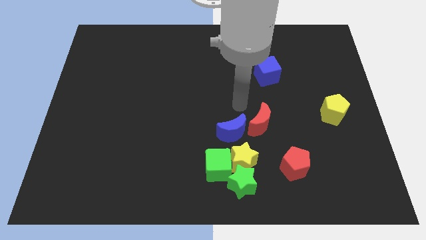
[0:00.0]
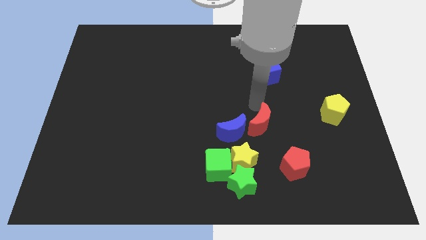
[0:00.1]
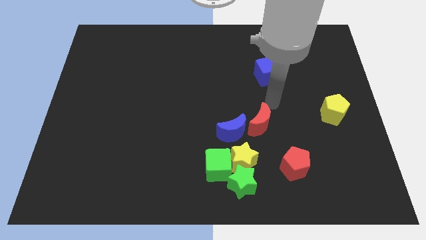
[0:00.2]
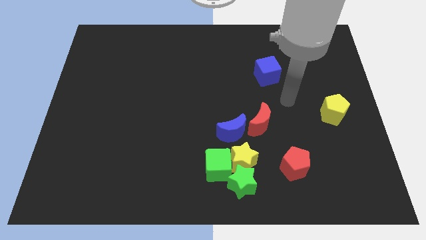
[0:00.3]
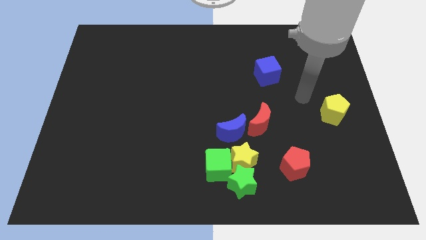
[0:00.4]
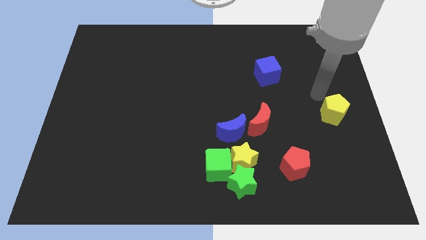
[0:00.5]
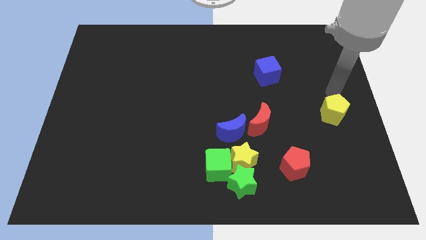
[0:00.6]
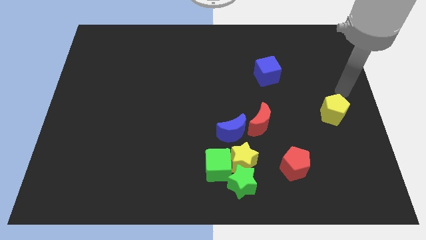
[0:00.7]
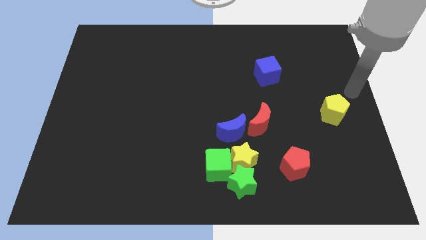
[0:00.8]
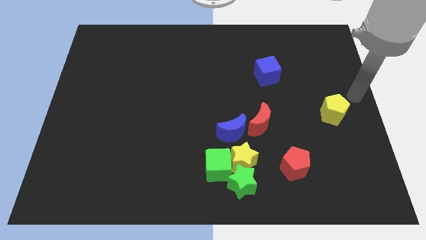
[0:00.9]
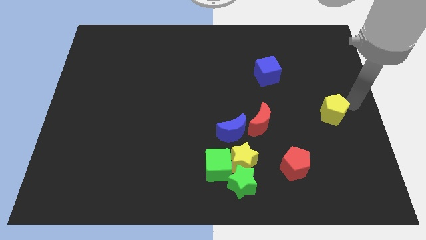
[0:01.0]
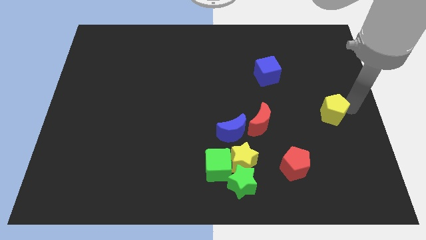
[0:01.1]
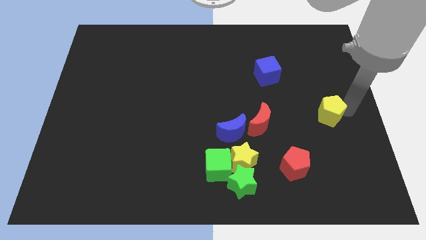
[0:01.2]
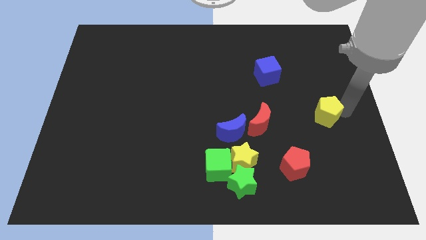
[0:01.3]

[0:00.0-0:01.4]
tap the yellow pentagon

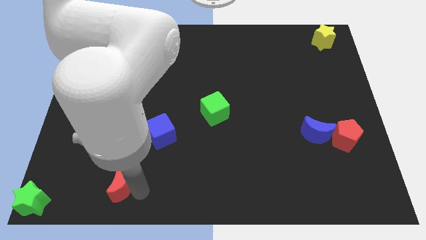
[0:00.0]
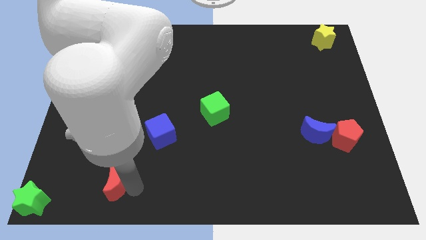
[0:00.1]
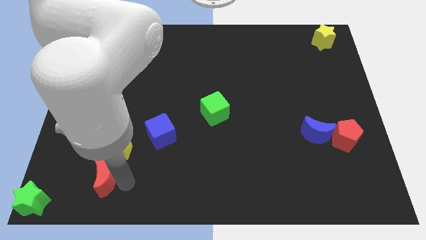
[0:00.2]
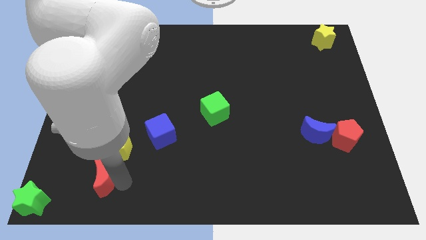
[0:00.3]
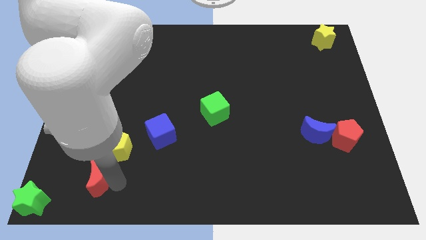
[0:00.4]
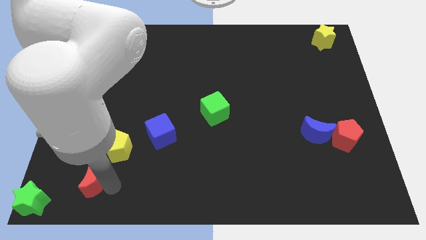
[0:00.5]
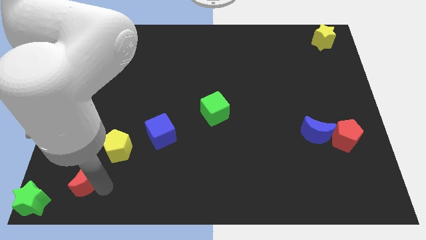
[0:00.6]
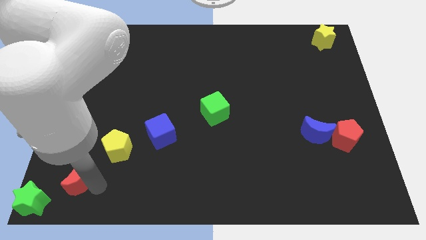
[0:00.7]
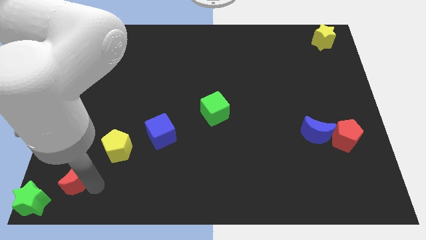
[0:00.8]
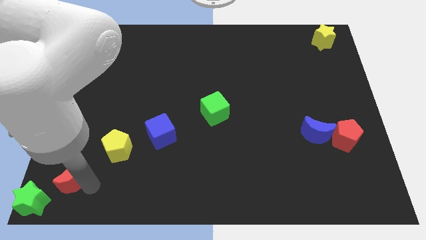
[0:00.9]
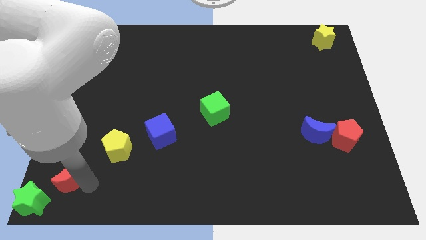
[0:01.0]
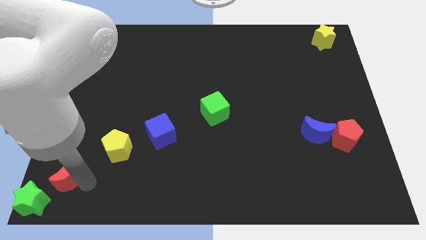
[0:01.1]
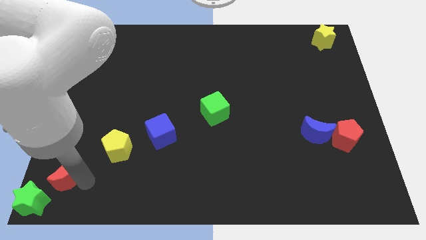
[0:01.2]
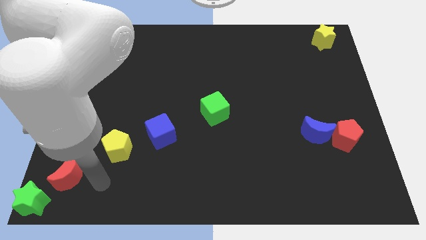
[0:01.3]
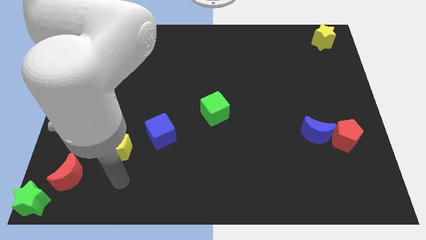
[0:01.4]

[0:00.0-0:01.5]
put the red moon diagonally top right to green star

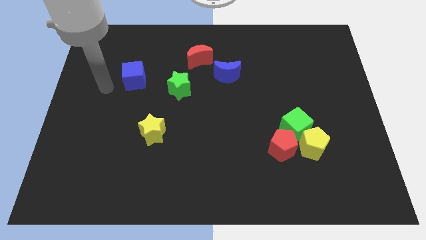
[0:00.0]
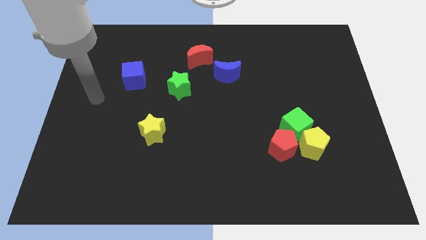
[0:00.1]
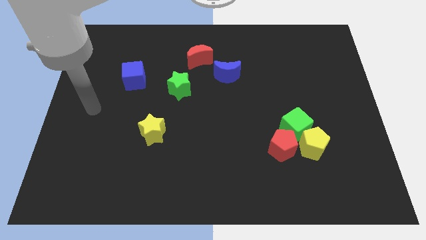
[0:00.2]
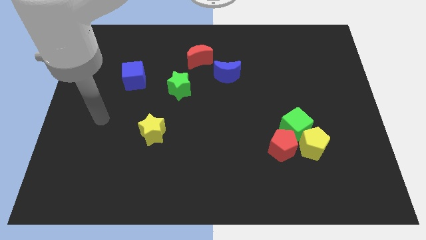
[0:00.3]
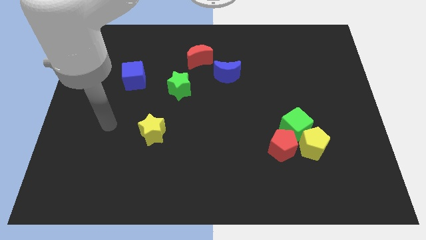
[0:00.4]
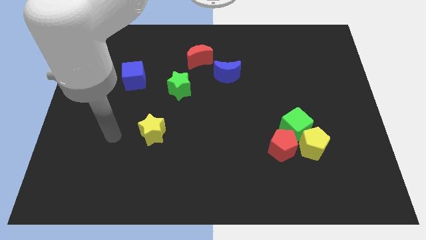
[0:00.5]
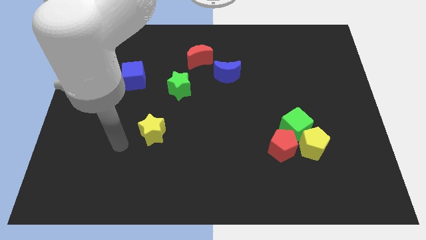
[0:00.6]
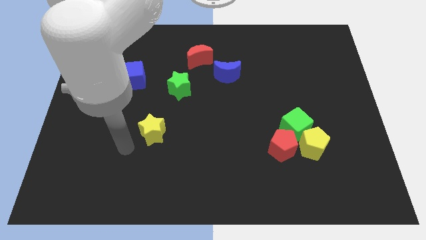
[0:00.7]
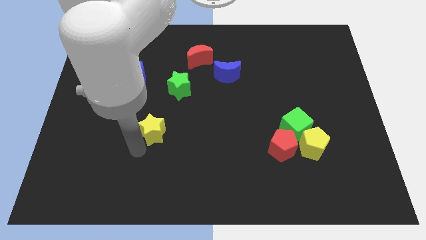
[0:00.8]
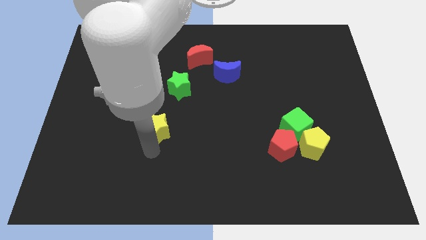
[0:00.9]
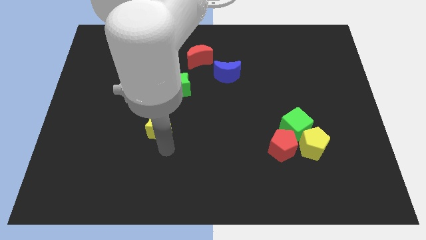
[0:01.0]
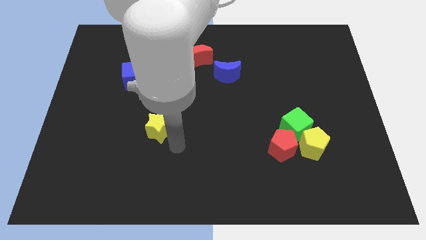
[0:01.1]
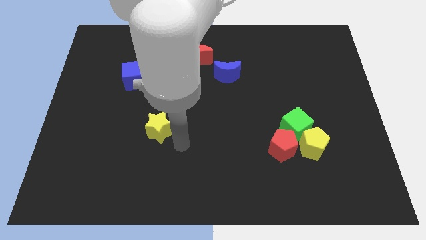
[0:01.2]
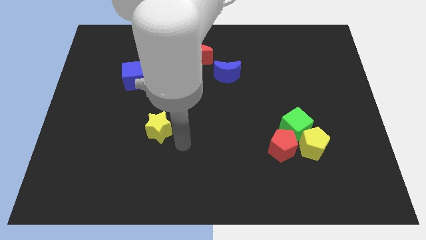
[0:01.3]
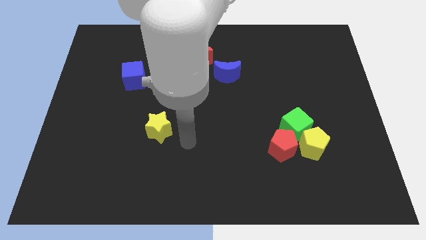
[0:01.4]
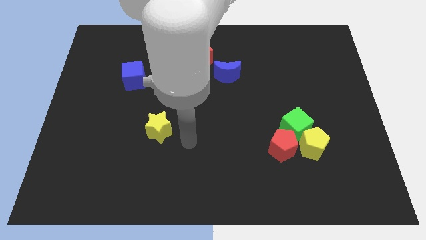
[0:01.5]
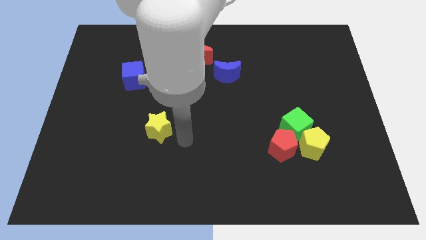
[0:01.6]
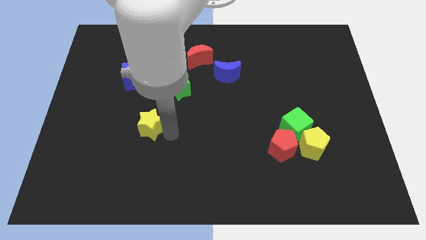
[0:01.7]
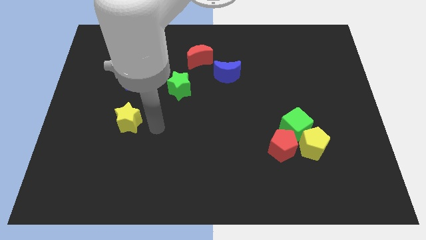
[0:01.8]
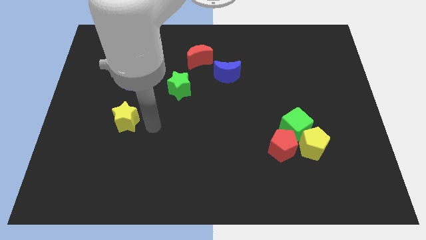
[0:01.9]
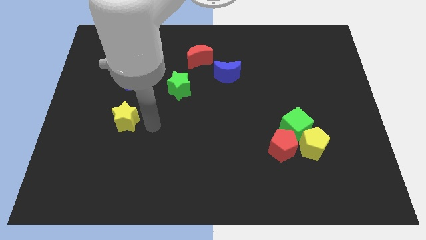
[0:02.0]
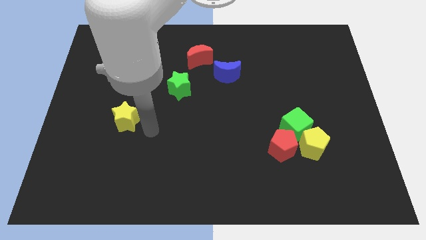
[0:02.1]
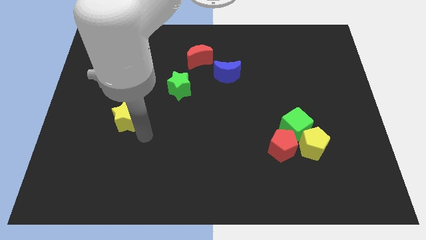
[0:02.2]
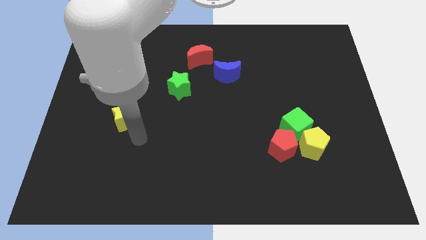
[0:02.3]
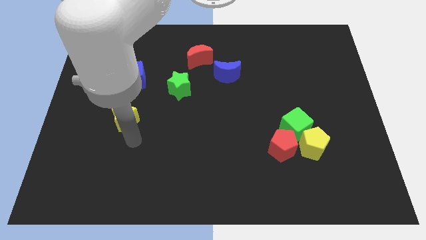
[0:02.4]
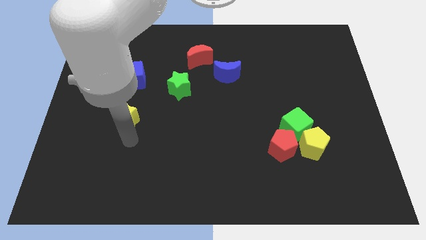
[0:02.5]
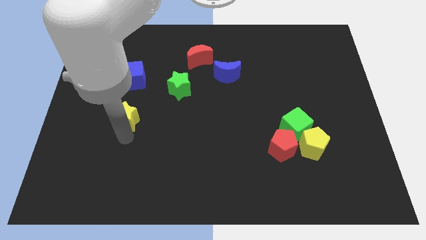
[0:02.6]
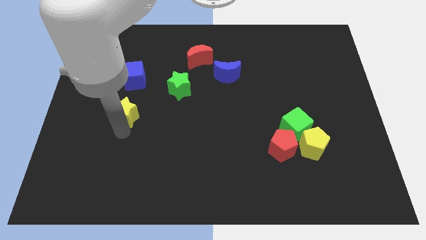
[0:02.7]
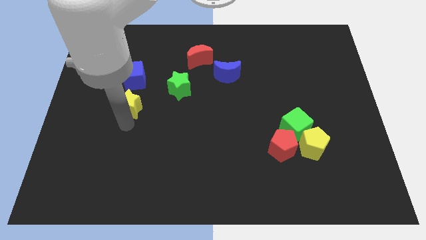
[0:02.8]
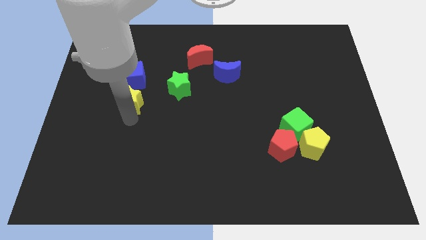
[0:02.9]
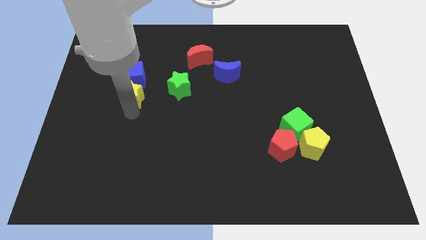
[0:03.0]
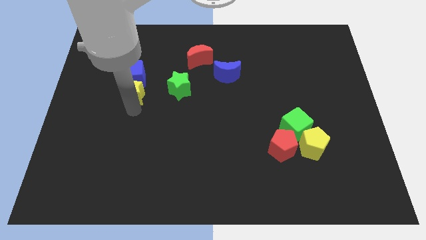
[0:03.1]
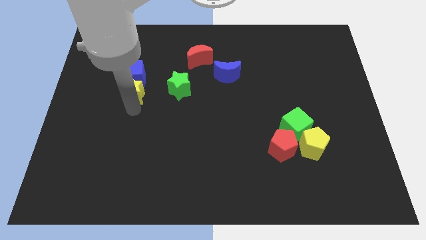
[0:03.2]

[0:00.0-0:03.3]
push the yellow star into the blue cube

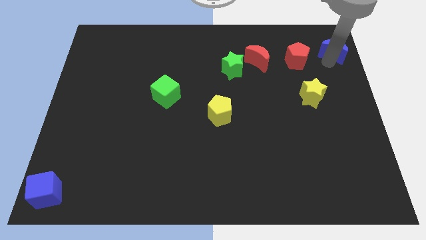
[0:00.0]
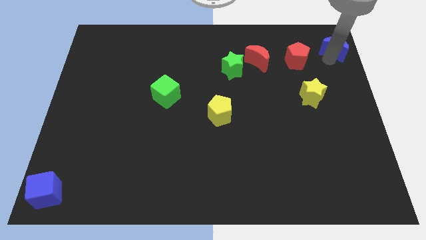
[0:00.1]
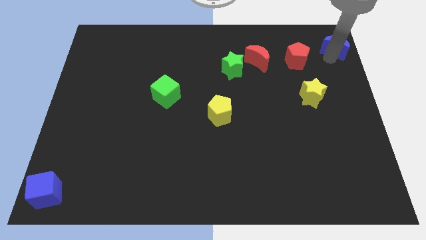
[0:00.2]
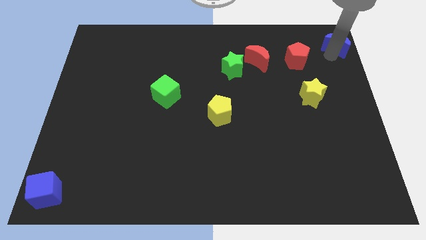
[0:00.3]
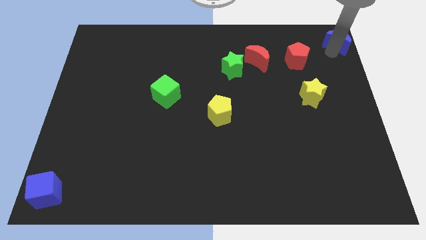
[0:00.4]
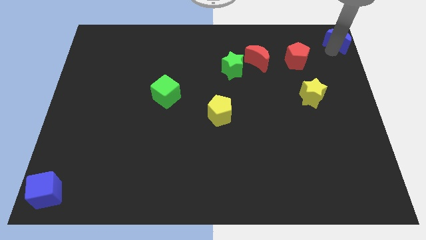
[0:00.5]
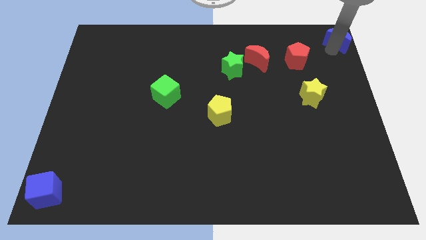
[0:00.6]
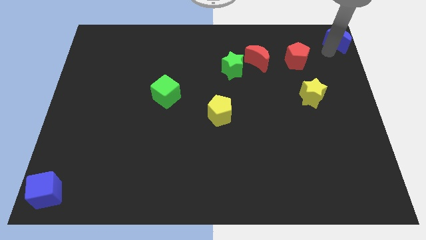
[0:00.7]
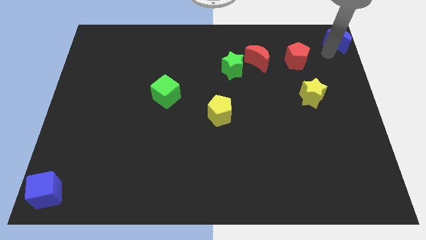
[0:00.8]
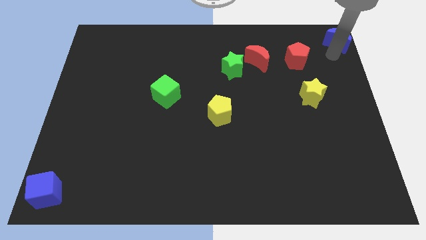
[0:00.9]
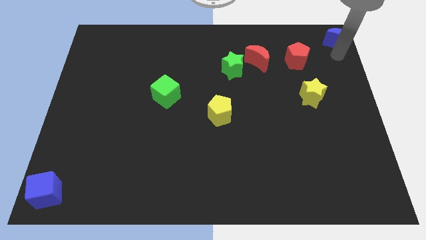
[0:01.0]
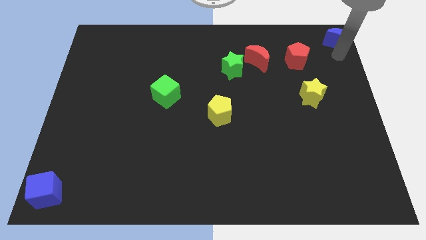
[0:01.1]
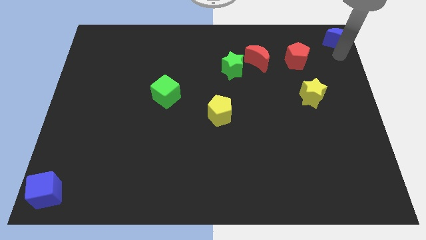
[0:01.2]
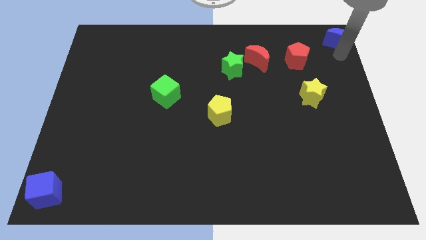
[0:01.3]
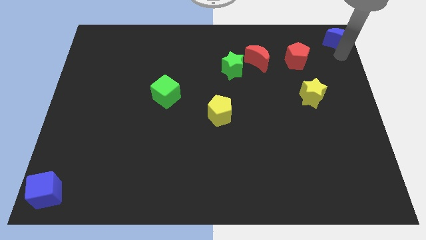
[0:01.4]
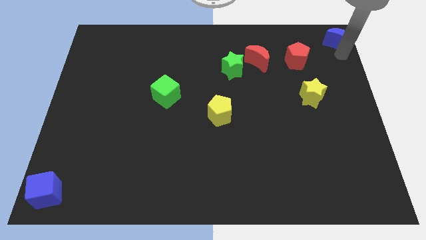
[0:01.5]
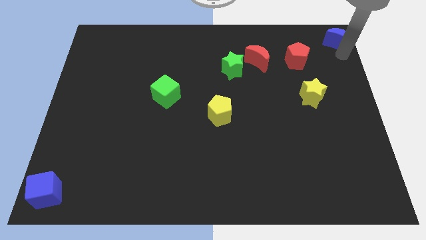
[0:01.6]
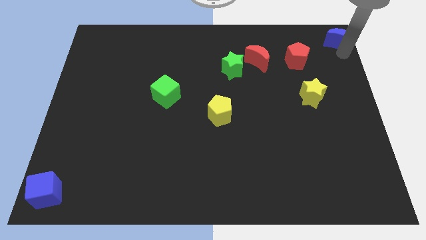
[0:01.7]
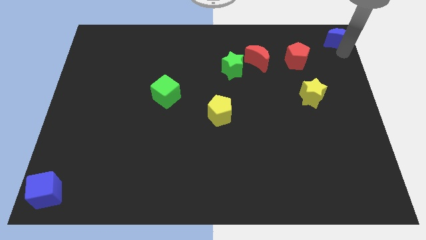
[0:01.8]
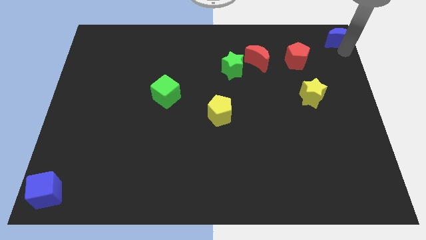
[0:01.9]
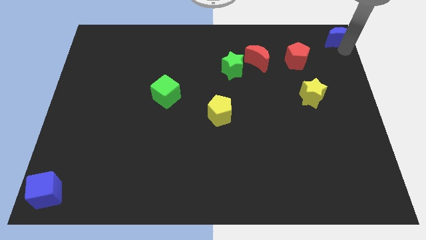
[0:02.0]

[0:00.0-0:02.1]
move blue moon right bottom corner

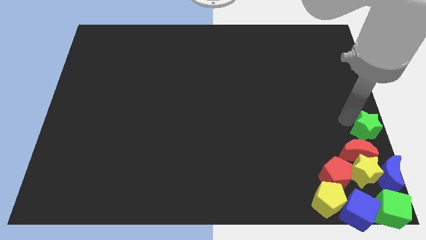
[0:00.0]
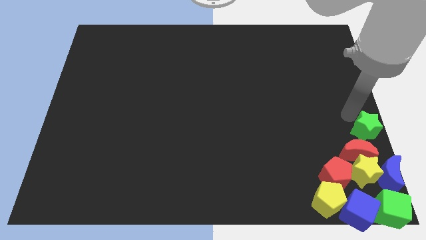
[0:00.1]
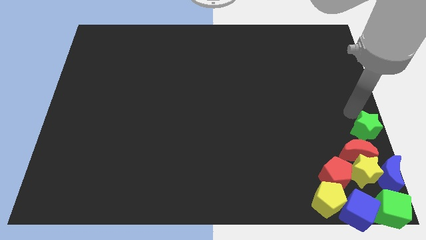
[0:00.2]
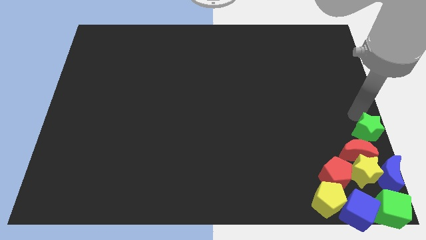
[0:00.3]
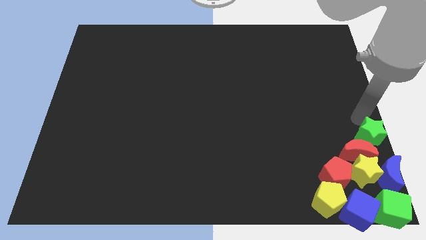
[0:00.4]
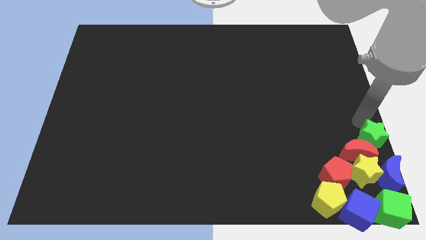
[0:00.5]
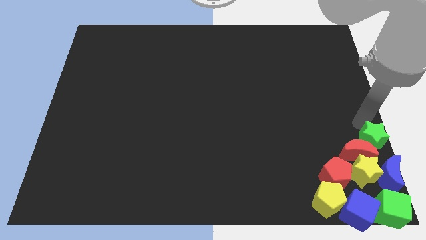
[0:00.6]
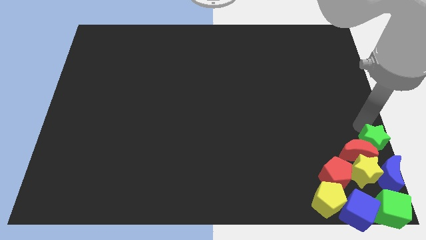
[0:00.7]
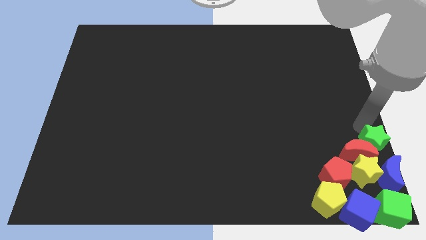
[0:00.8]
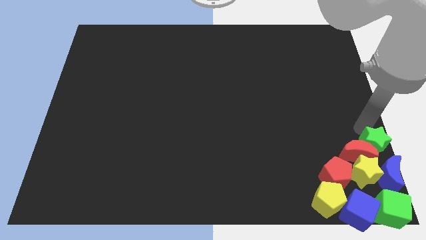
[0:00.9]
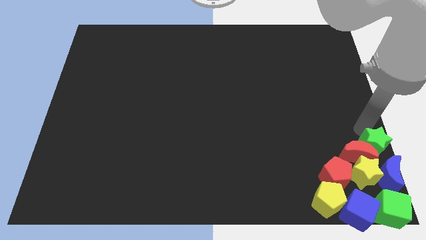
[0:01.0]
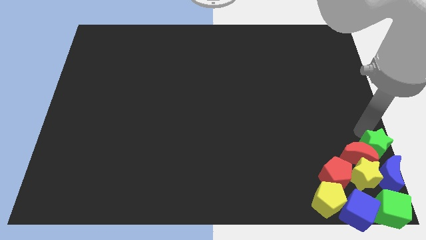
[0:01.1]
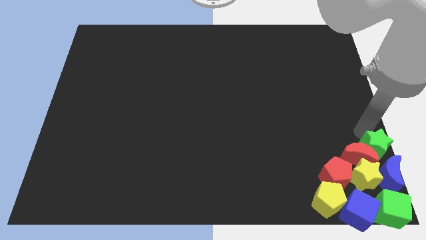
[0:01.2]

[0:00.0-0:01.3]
place green star above the red moon
